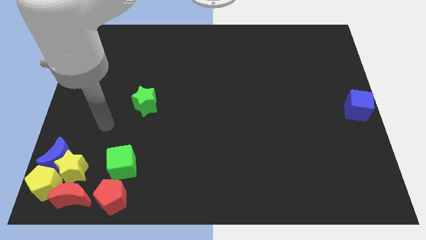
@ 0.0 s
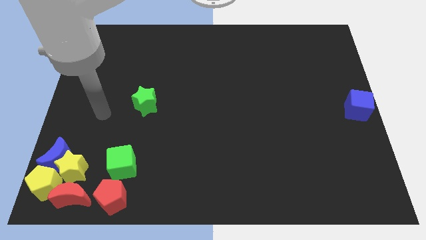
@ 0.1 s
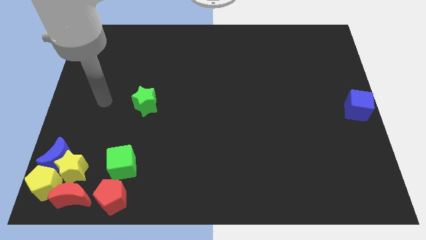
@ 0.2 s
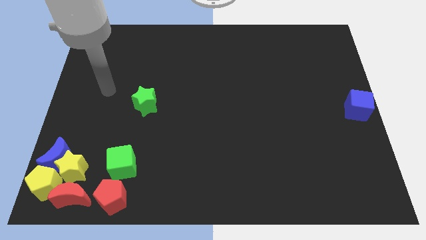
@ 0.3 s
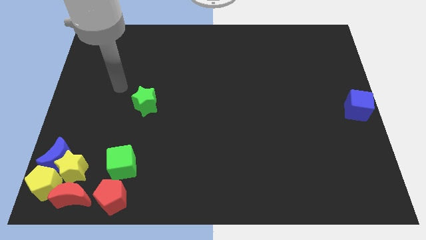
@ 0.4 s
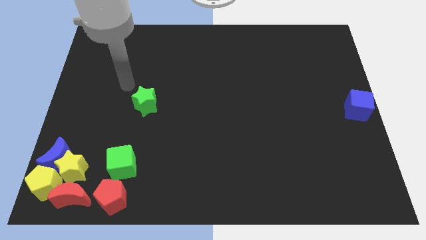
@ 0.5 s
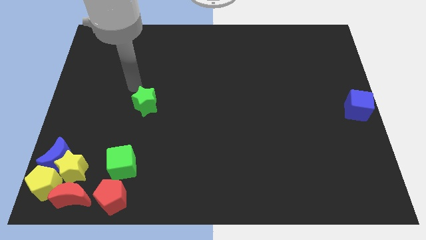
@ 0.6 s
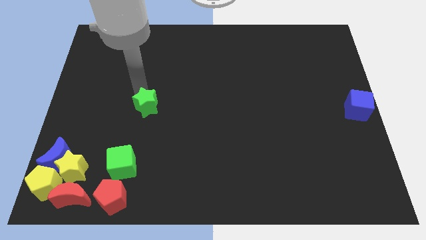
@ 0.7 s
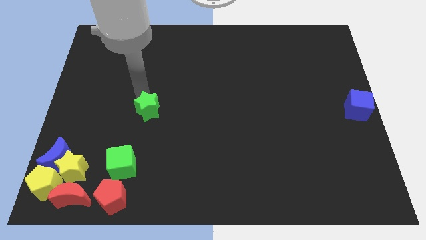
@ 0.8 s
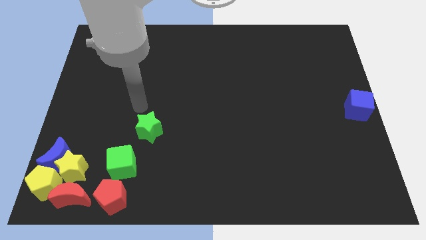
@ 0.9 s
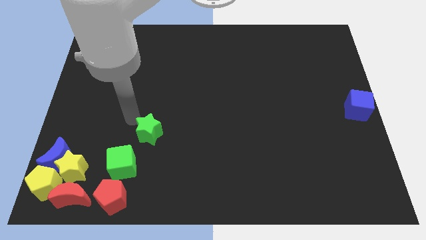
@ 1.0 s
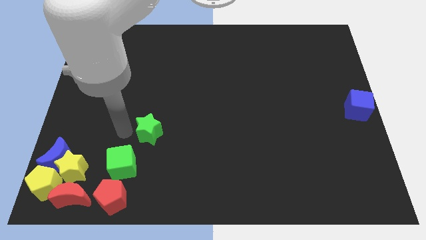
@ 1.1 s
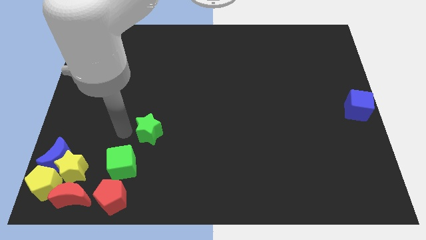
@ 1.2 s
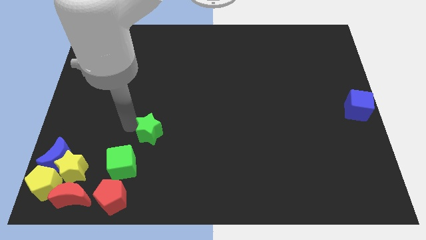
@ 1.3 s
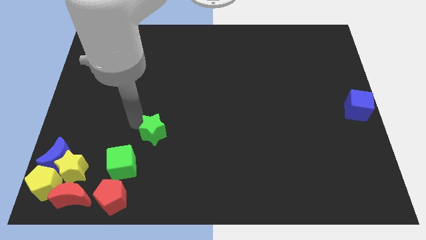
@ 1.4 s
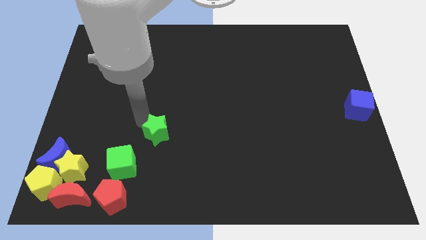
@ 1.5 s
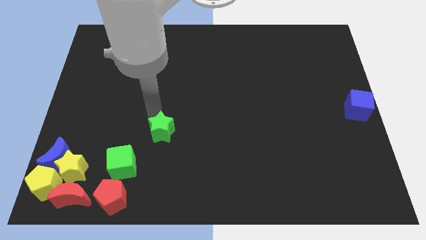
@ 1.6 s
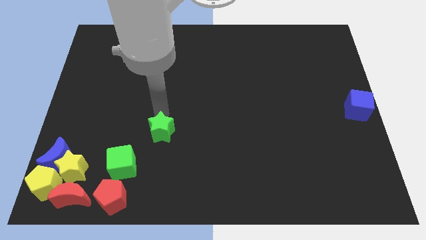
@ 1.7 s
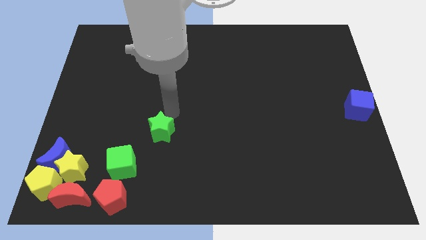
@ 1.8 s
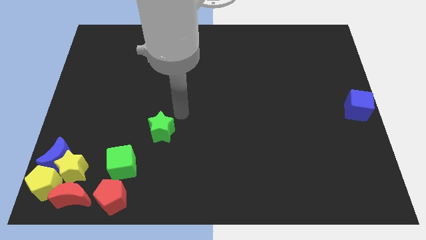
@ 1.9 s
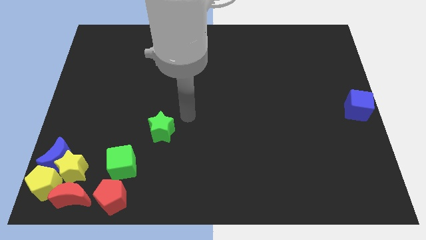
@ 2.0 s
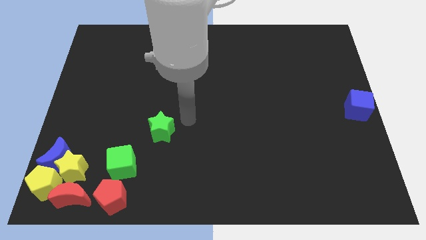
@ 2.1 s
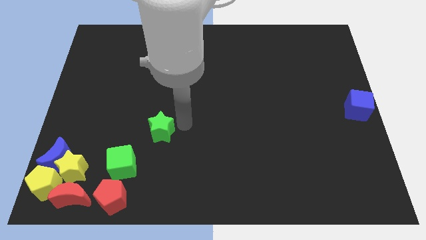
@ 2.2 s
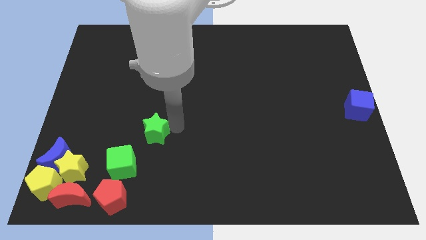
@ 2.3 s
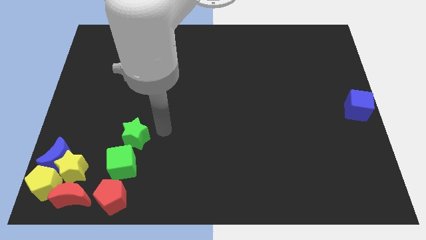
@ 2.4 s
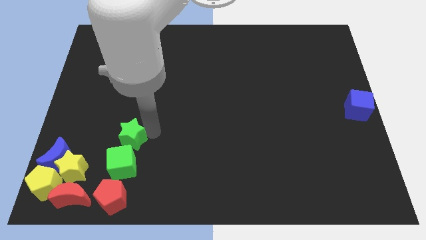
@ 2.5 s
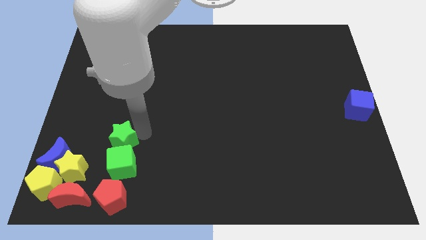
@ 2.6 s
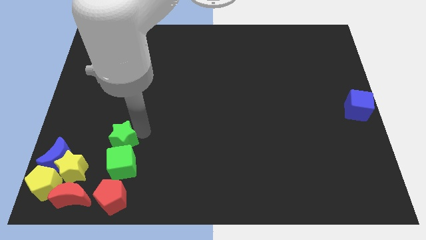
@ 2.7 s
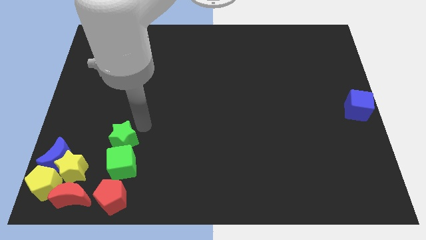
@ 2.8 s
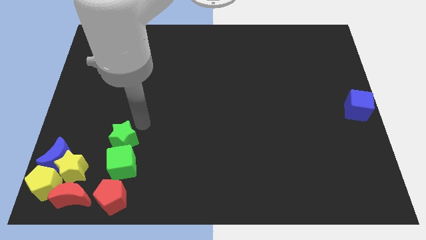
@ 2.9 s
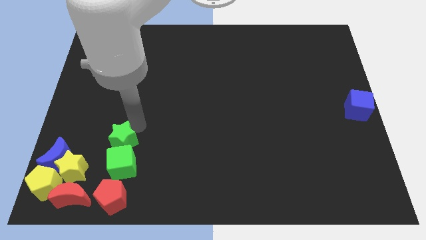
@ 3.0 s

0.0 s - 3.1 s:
push the green star to the top side of the green cube

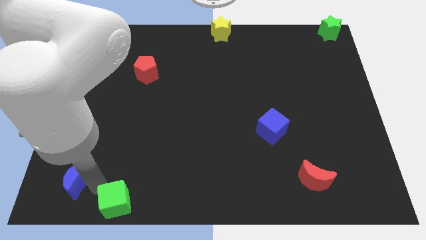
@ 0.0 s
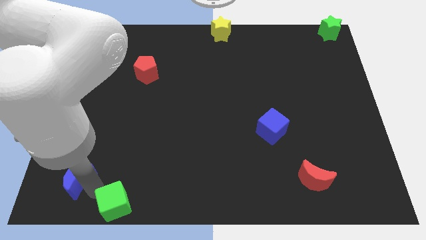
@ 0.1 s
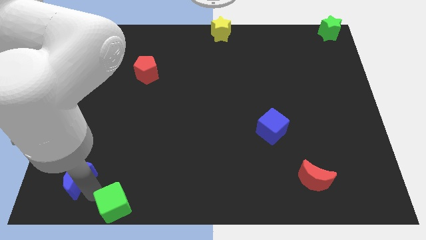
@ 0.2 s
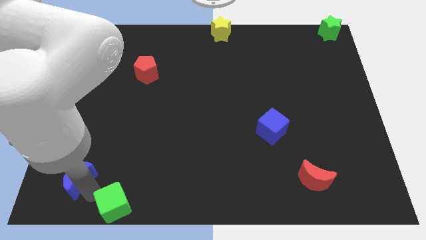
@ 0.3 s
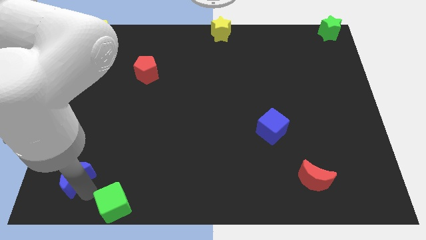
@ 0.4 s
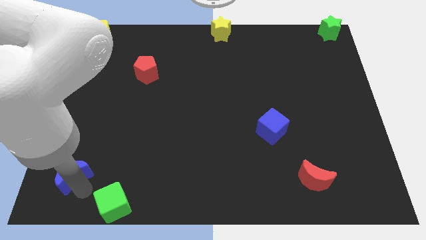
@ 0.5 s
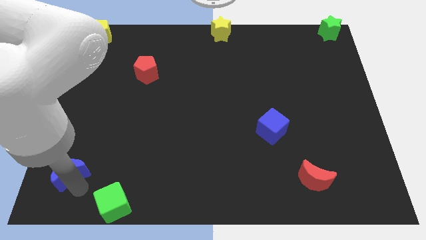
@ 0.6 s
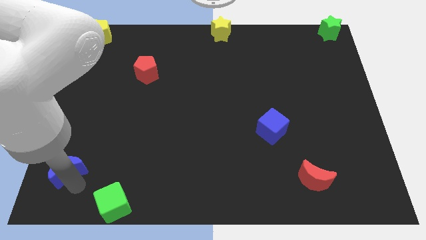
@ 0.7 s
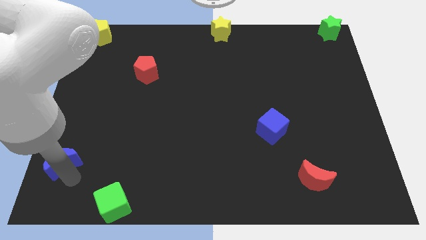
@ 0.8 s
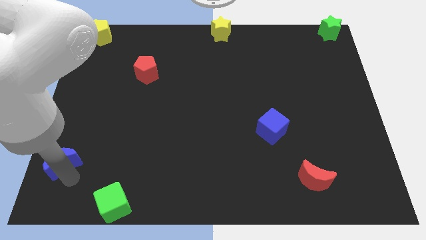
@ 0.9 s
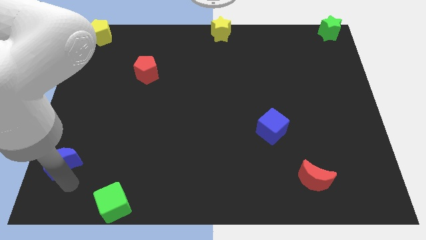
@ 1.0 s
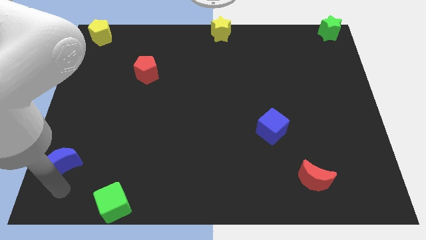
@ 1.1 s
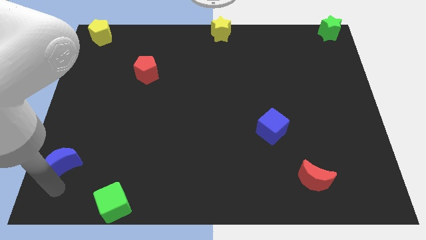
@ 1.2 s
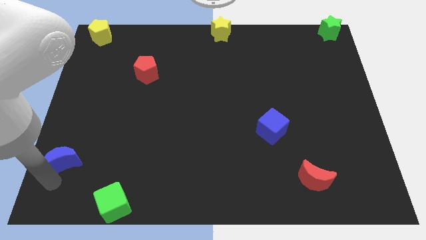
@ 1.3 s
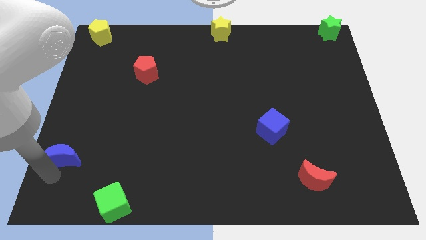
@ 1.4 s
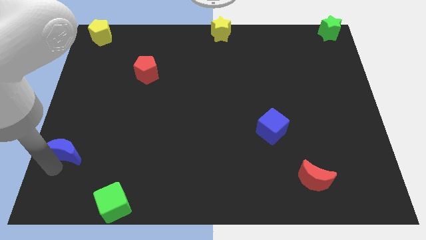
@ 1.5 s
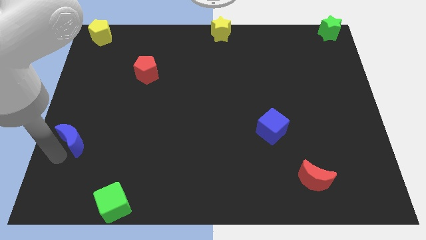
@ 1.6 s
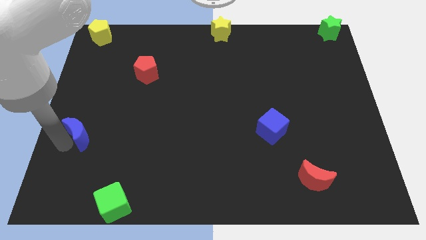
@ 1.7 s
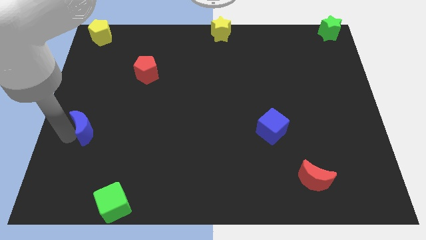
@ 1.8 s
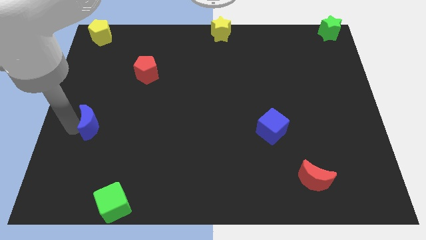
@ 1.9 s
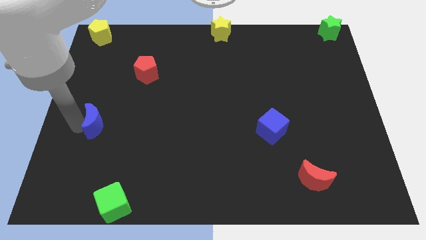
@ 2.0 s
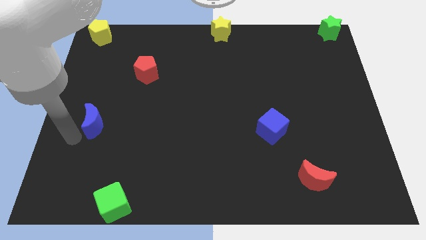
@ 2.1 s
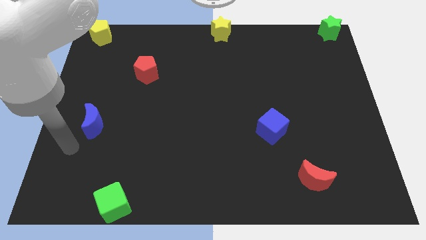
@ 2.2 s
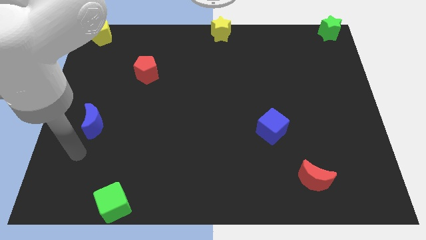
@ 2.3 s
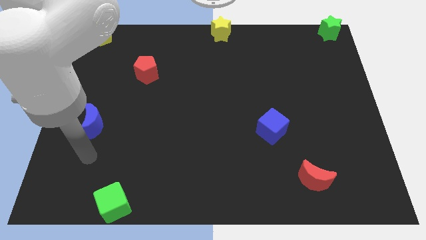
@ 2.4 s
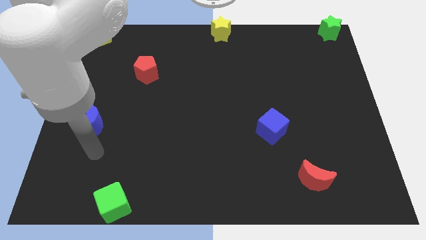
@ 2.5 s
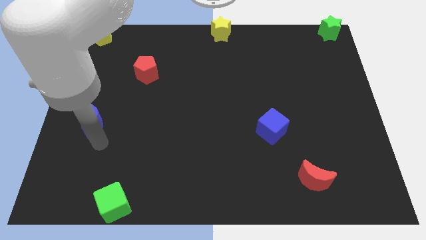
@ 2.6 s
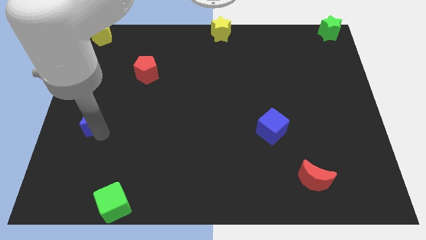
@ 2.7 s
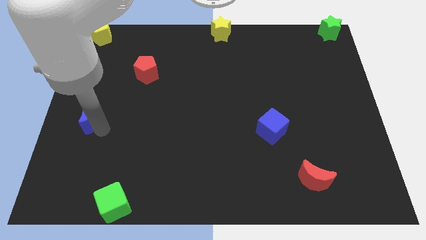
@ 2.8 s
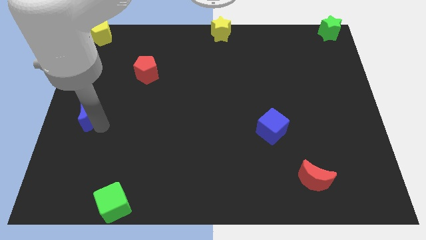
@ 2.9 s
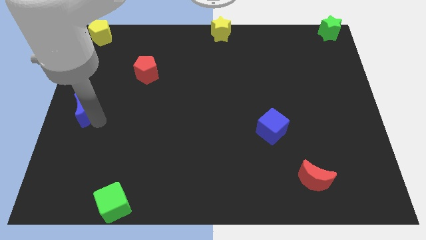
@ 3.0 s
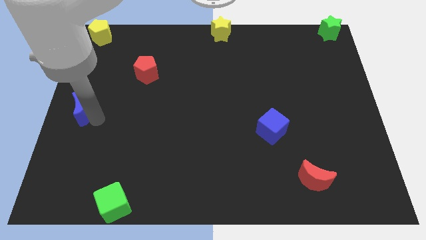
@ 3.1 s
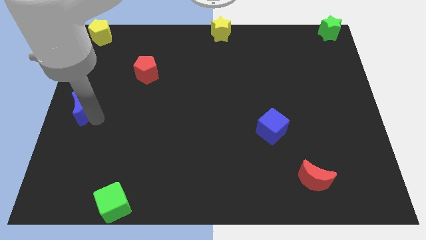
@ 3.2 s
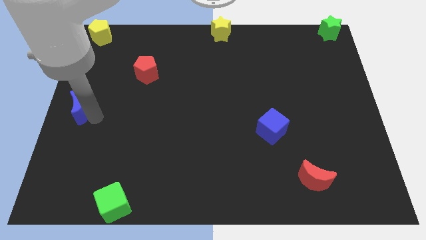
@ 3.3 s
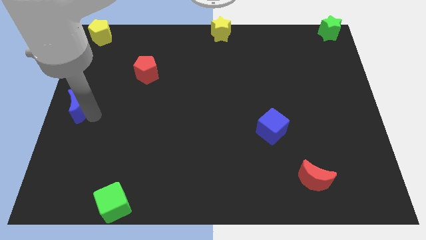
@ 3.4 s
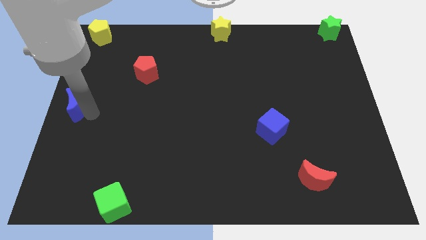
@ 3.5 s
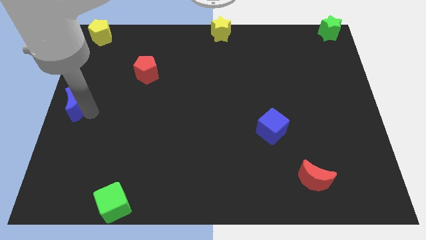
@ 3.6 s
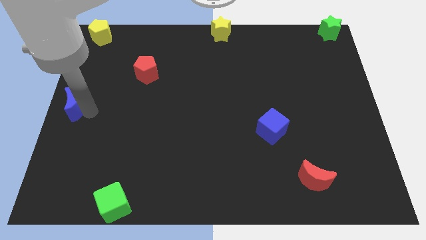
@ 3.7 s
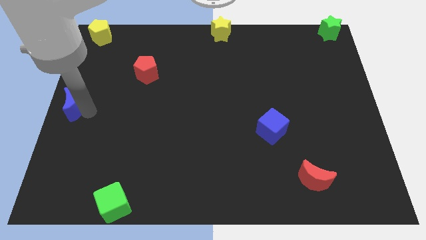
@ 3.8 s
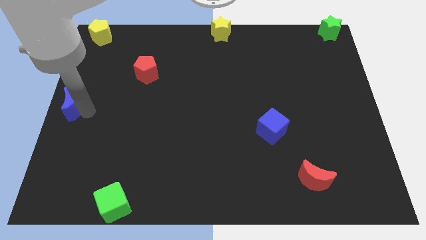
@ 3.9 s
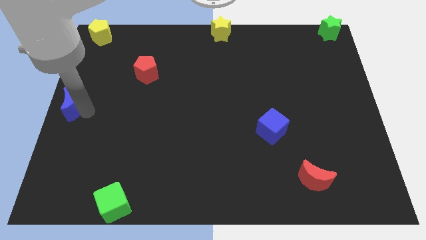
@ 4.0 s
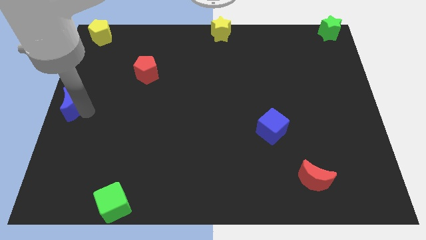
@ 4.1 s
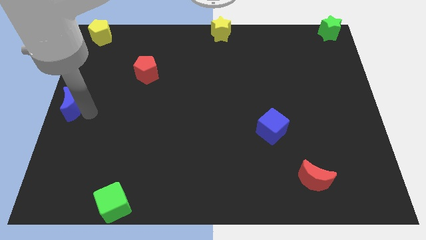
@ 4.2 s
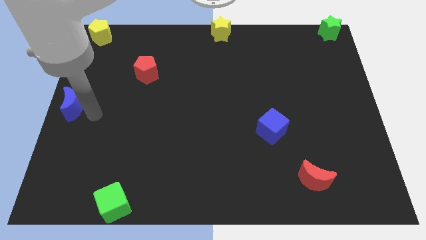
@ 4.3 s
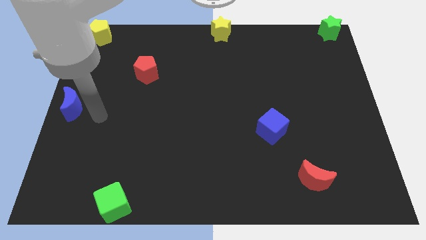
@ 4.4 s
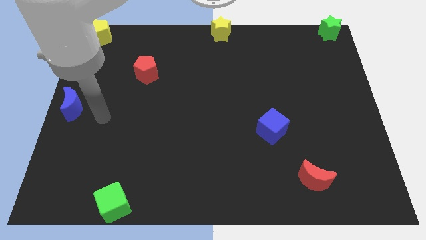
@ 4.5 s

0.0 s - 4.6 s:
move the blue crescent to the left center of the board

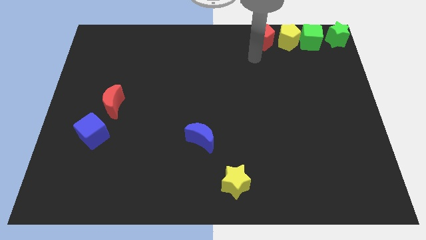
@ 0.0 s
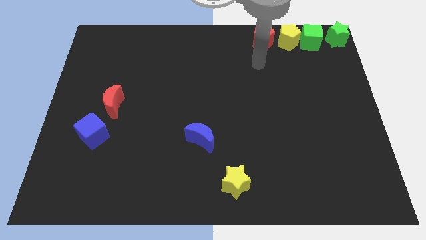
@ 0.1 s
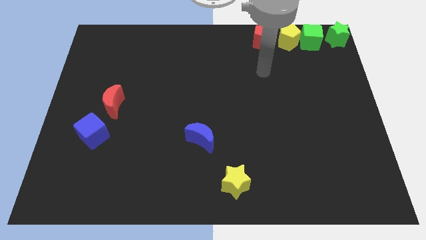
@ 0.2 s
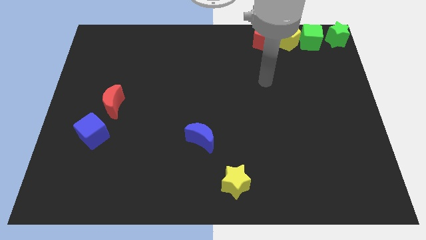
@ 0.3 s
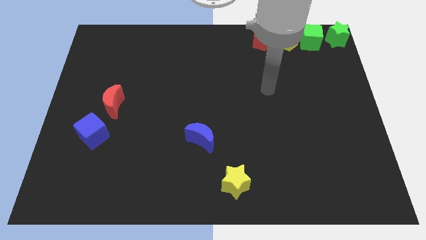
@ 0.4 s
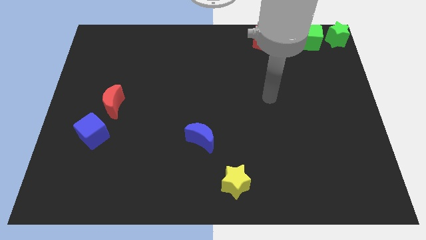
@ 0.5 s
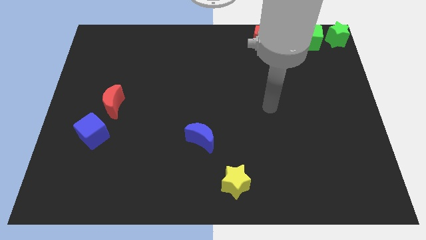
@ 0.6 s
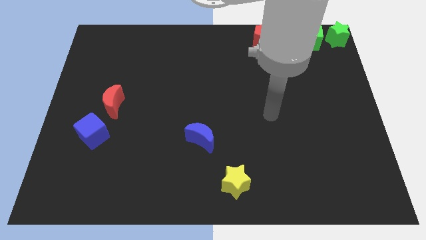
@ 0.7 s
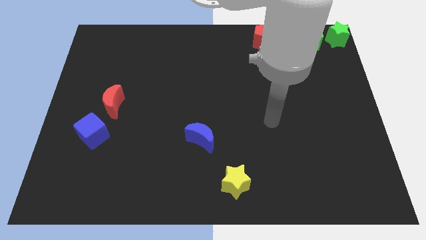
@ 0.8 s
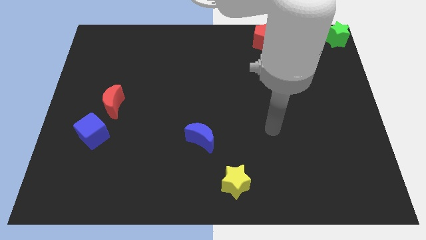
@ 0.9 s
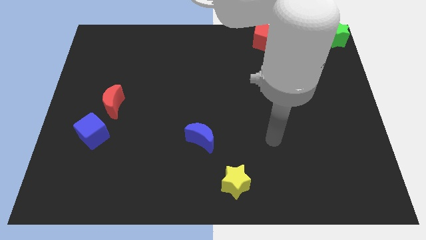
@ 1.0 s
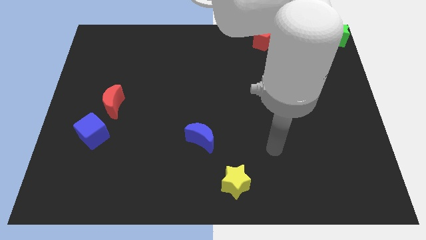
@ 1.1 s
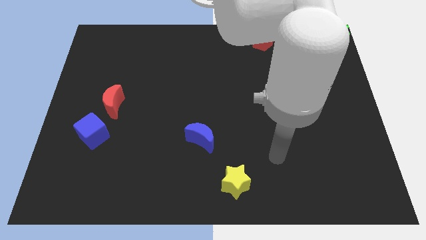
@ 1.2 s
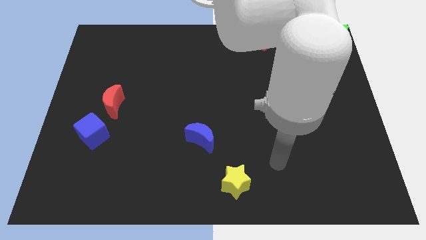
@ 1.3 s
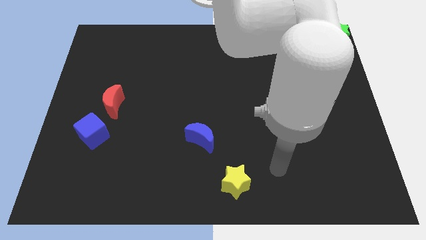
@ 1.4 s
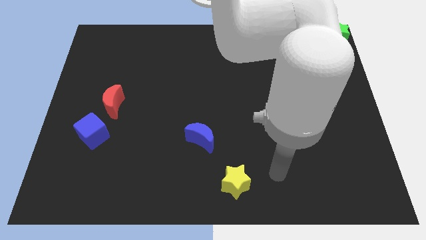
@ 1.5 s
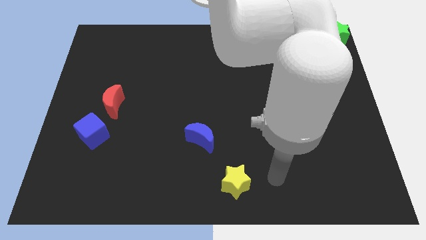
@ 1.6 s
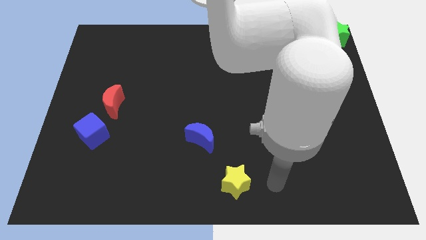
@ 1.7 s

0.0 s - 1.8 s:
move the arm towards the right of the yellow star
